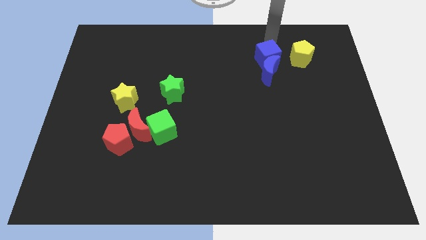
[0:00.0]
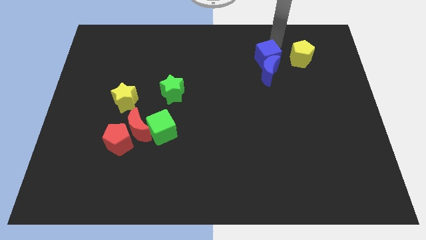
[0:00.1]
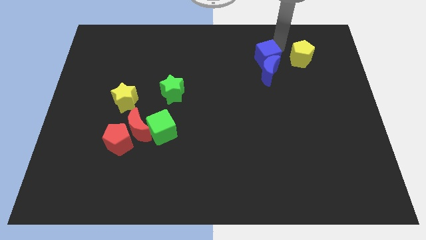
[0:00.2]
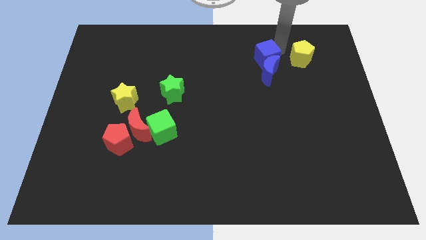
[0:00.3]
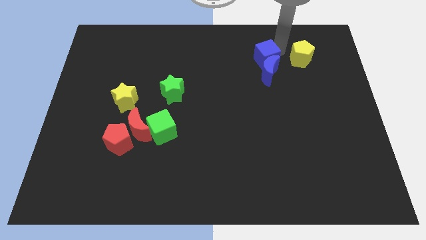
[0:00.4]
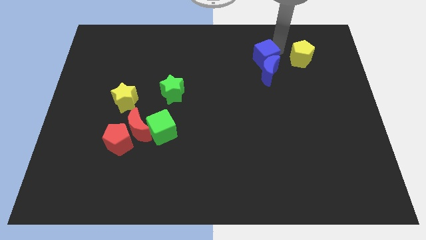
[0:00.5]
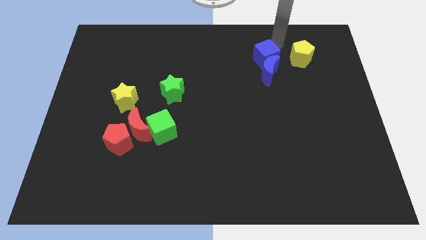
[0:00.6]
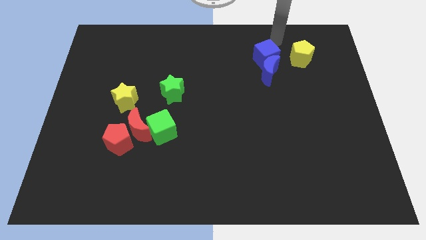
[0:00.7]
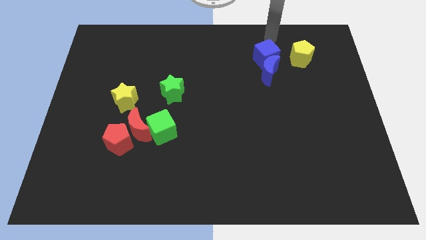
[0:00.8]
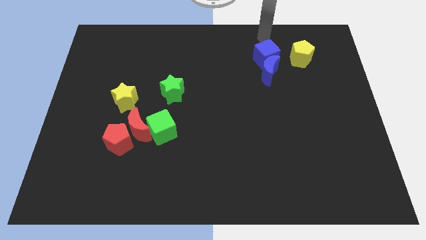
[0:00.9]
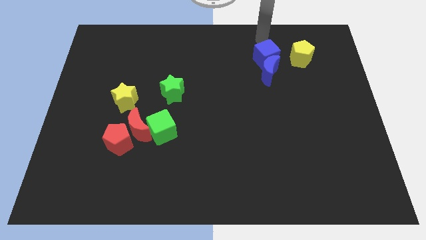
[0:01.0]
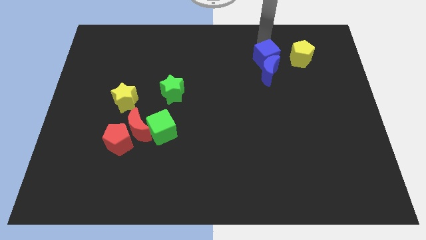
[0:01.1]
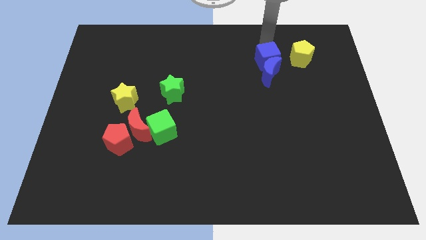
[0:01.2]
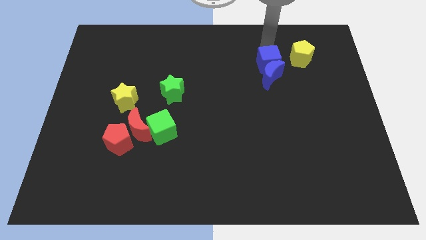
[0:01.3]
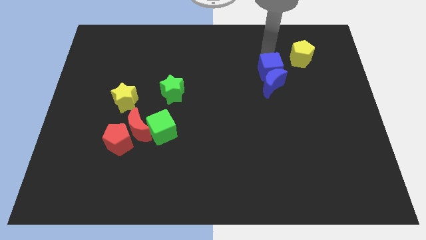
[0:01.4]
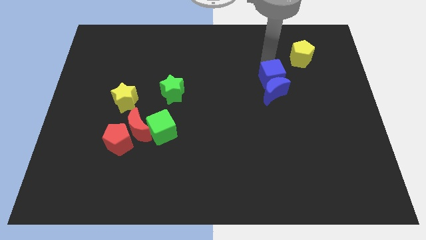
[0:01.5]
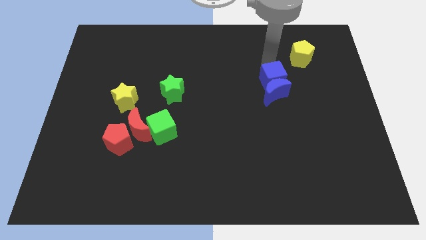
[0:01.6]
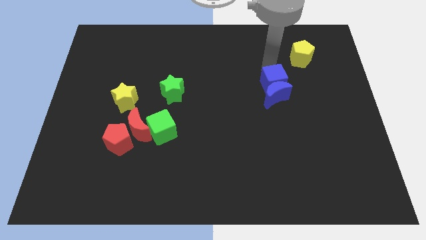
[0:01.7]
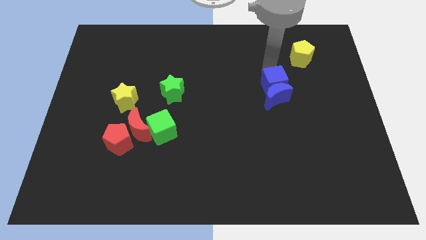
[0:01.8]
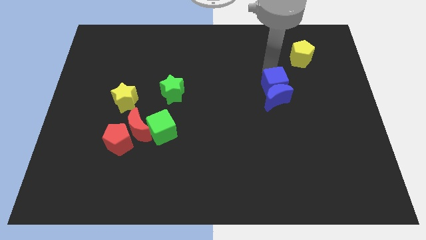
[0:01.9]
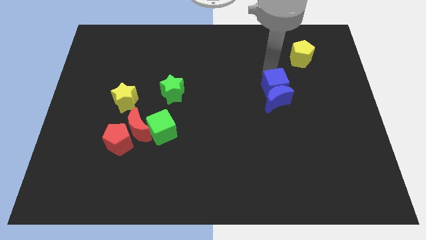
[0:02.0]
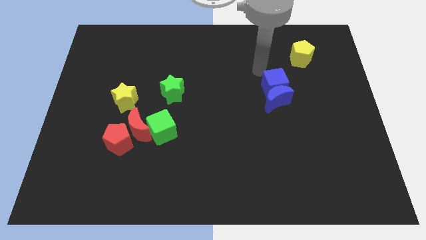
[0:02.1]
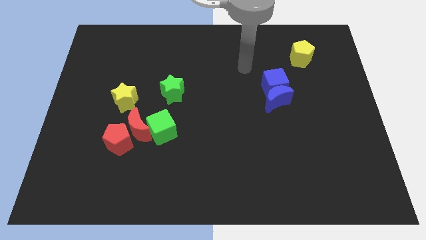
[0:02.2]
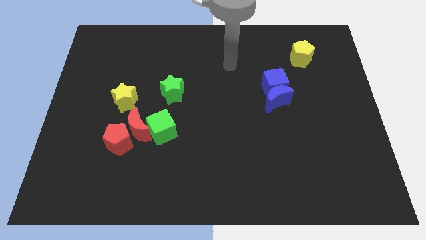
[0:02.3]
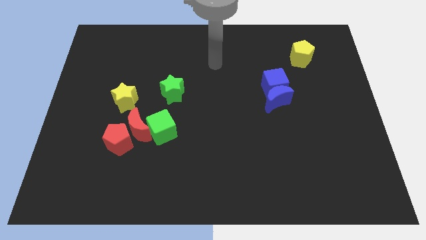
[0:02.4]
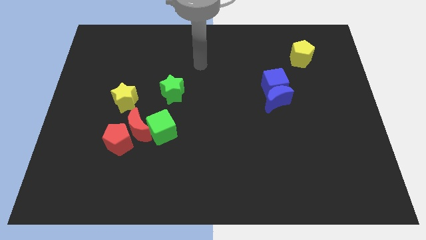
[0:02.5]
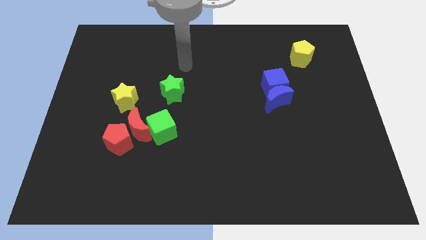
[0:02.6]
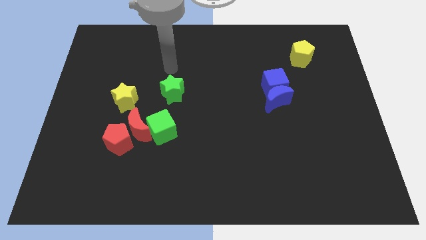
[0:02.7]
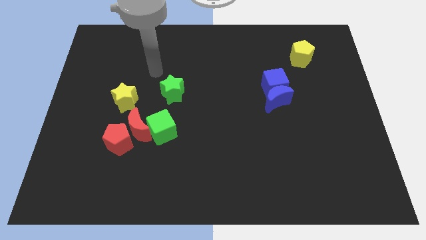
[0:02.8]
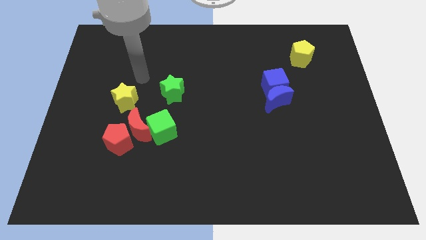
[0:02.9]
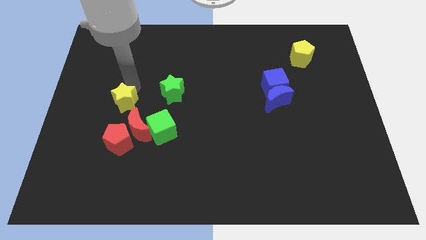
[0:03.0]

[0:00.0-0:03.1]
push the blue cube into blue crescent

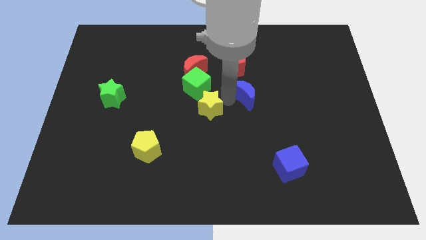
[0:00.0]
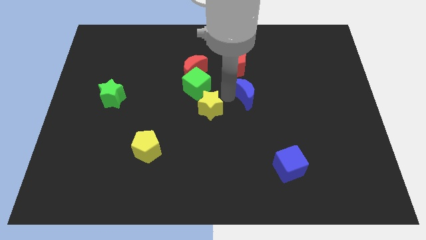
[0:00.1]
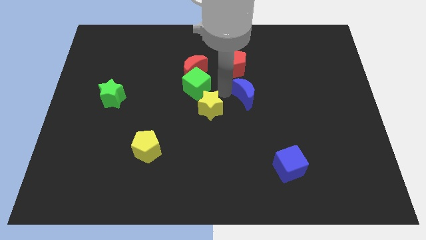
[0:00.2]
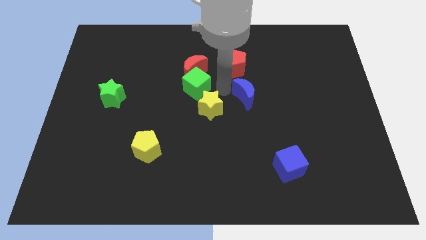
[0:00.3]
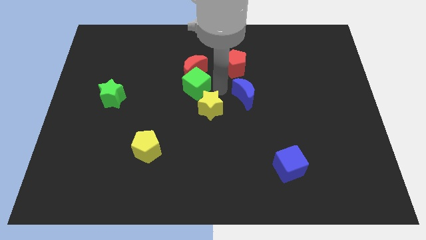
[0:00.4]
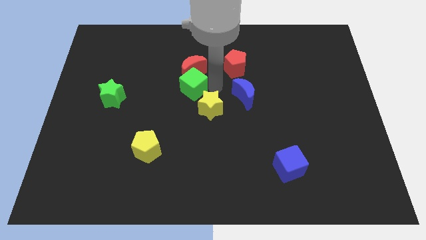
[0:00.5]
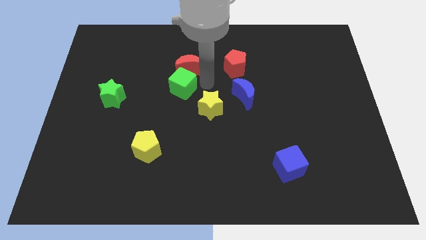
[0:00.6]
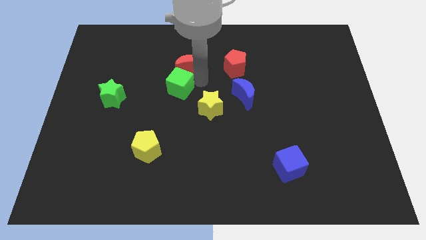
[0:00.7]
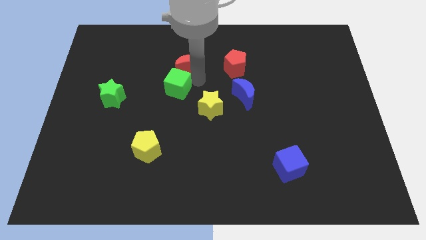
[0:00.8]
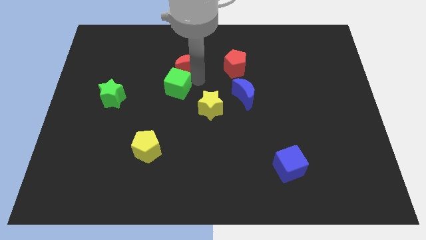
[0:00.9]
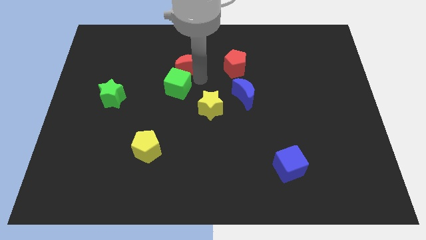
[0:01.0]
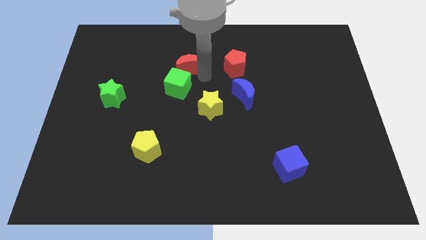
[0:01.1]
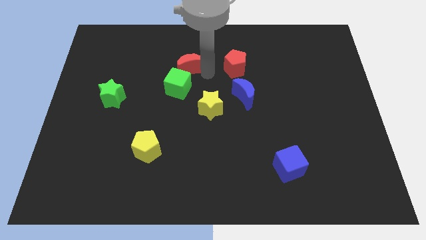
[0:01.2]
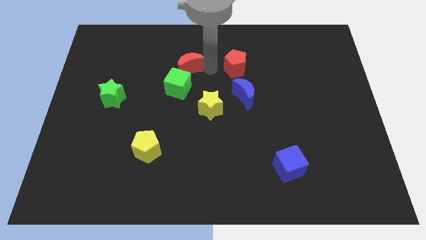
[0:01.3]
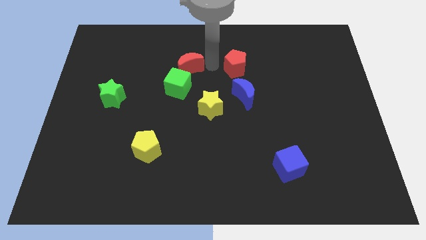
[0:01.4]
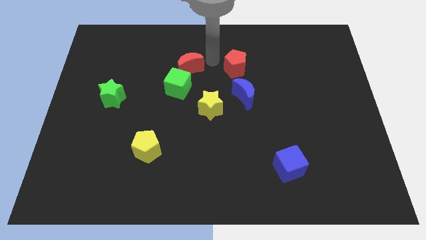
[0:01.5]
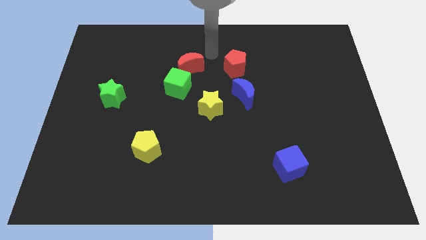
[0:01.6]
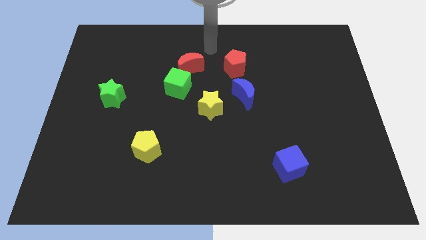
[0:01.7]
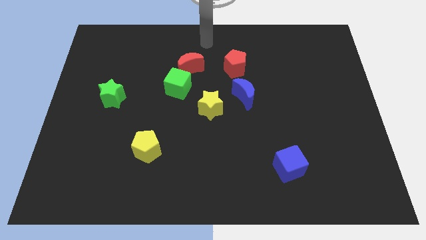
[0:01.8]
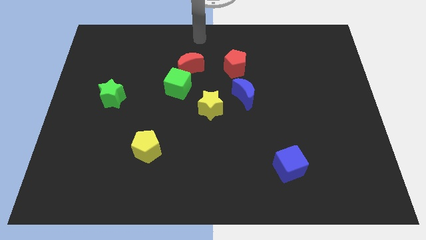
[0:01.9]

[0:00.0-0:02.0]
move your arm towards the top center of the board

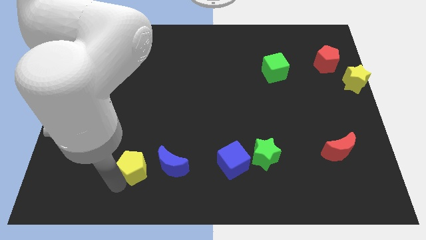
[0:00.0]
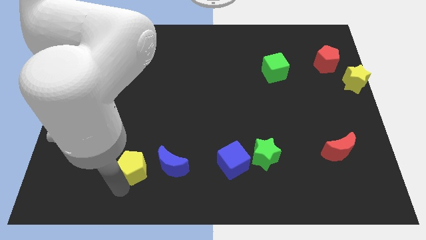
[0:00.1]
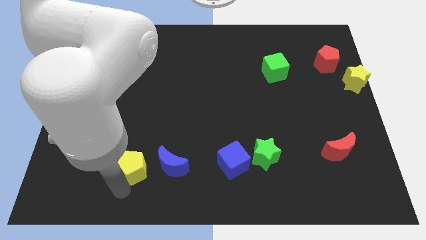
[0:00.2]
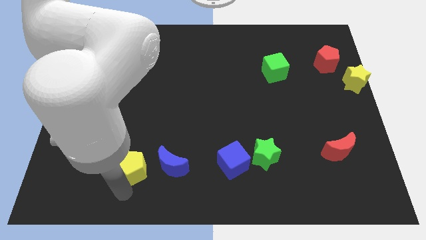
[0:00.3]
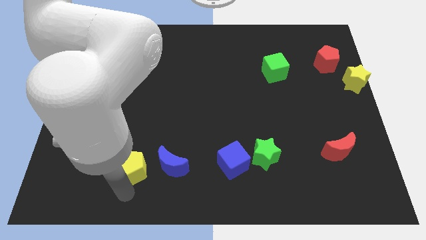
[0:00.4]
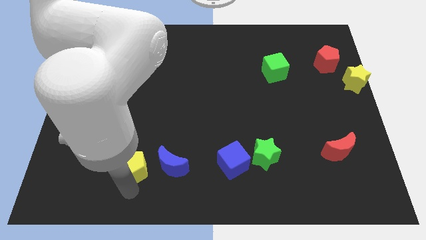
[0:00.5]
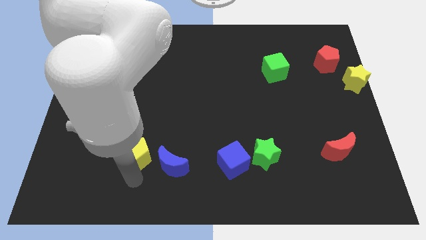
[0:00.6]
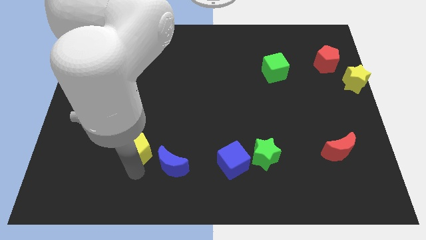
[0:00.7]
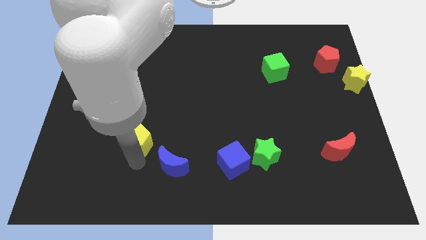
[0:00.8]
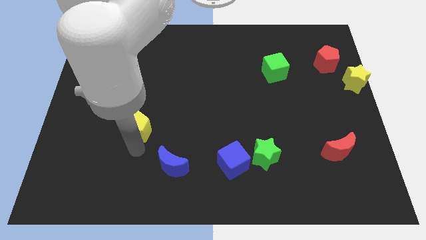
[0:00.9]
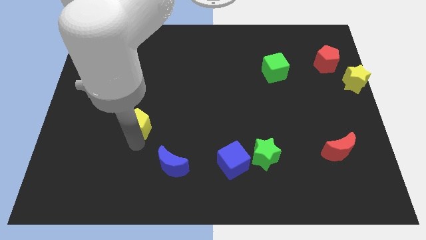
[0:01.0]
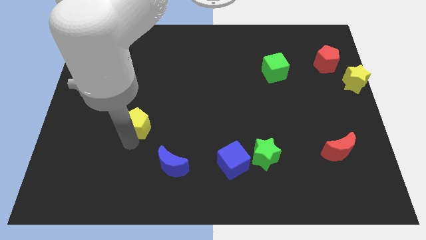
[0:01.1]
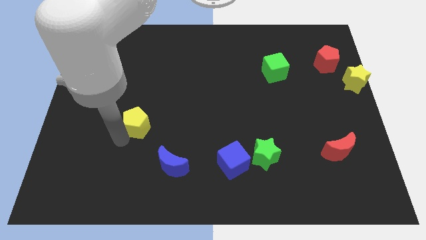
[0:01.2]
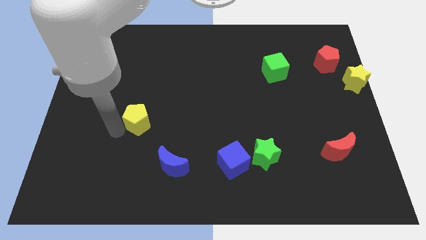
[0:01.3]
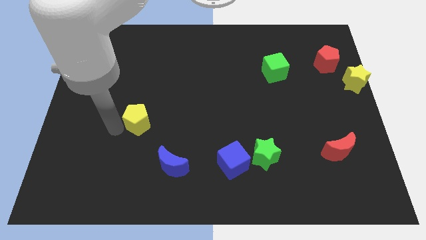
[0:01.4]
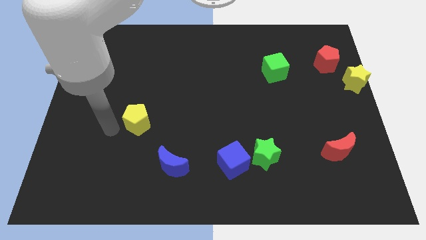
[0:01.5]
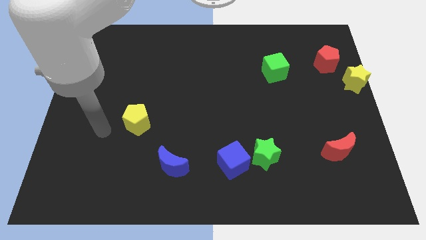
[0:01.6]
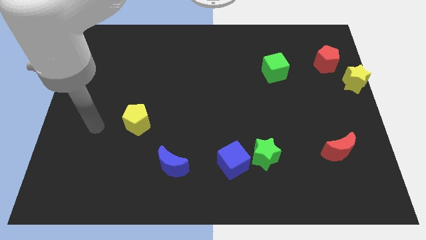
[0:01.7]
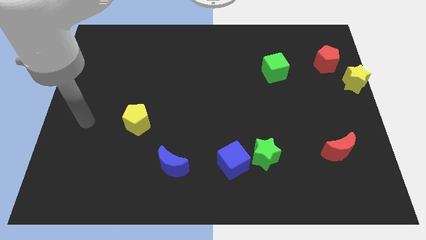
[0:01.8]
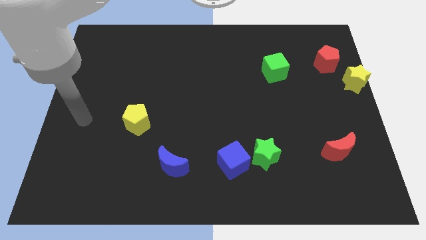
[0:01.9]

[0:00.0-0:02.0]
push the yellow pentagon slightly up

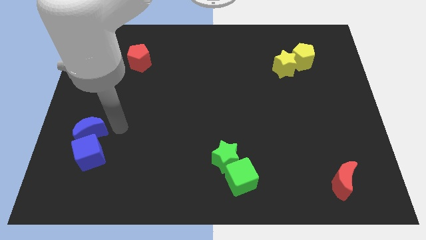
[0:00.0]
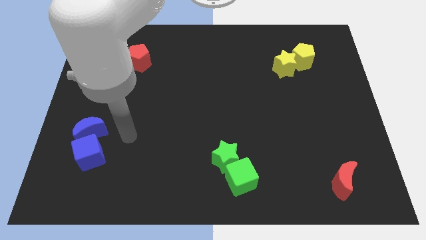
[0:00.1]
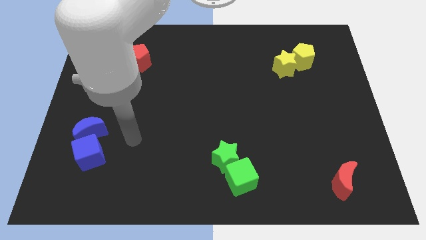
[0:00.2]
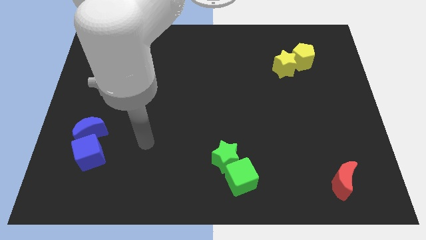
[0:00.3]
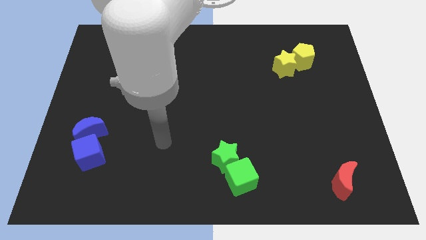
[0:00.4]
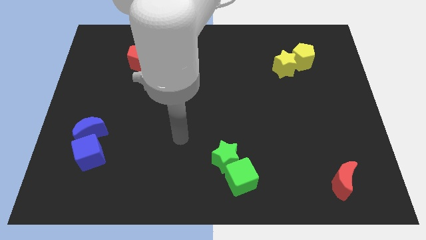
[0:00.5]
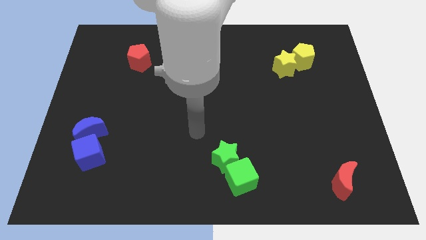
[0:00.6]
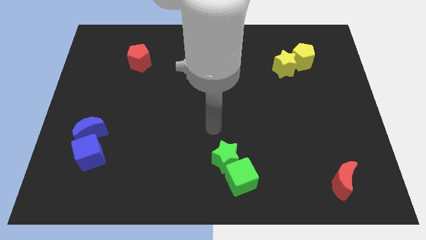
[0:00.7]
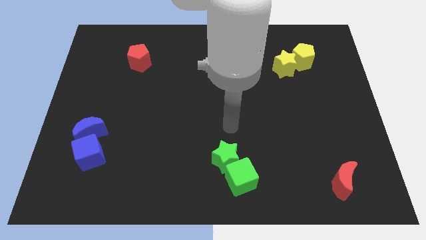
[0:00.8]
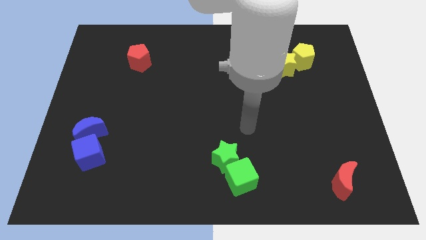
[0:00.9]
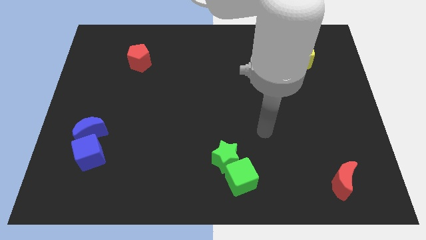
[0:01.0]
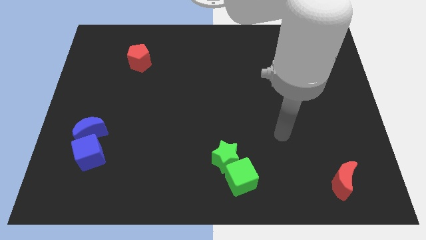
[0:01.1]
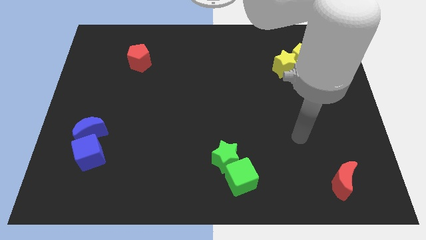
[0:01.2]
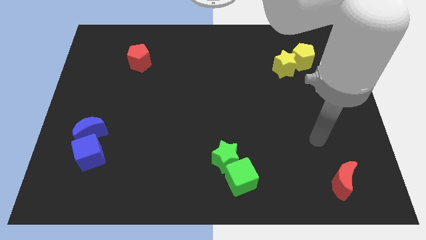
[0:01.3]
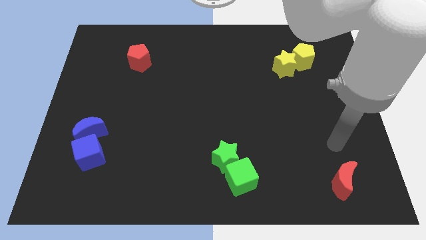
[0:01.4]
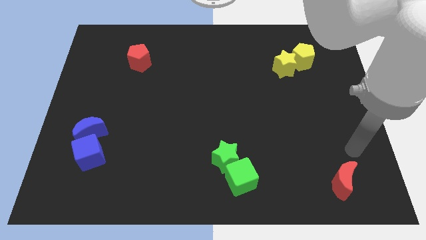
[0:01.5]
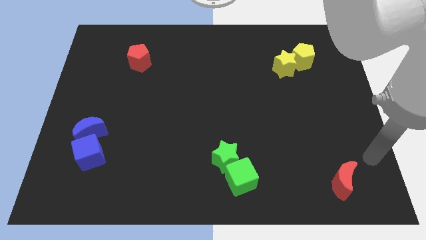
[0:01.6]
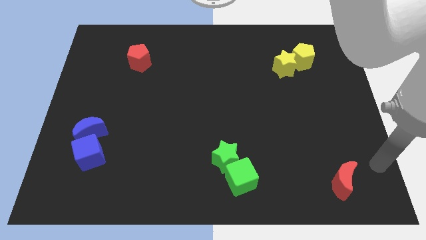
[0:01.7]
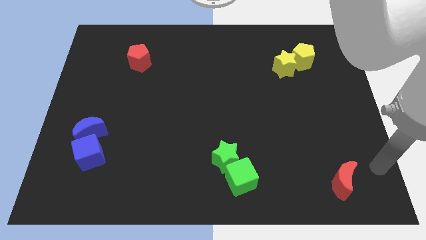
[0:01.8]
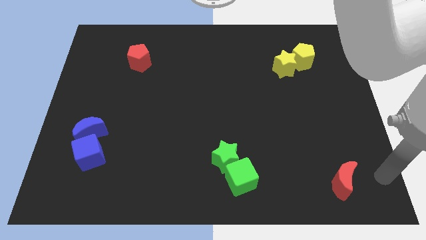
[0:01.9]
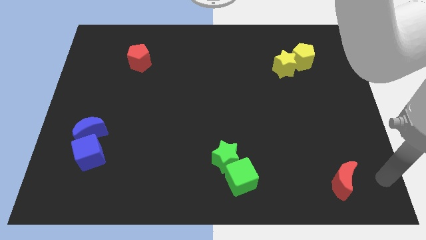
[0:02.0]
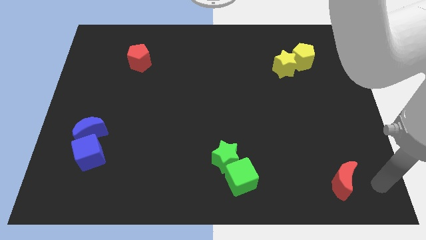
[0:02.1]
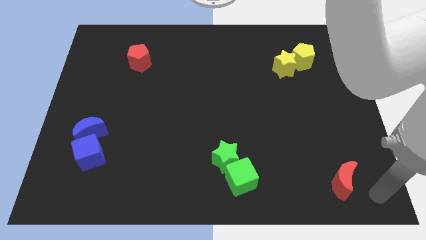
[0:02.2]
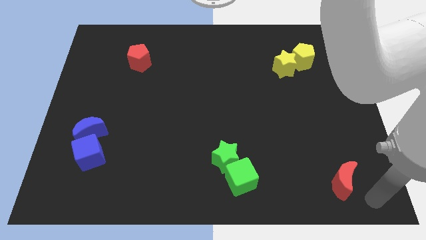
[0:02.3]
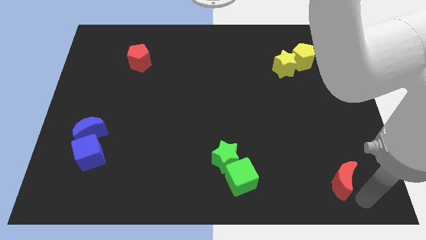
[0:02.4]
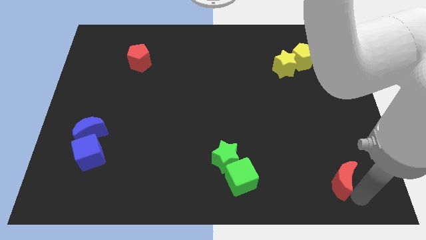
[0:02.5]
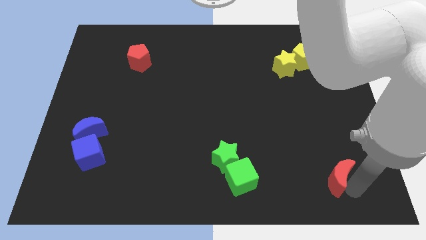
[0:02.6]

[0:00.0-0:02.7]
place your hand at the bottom right of the red crescent
